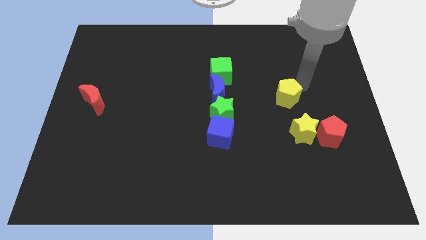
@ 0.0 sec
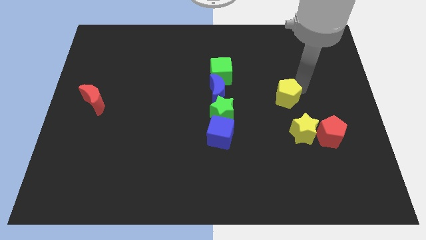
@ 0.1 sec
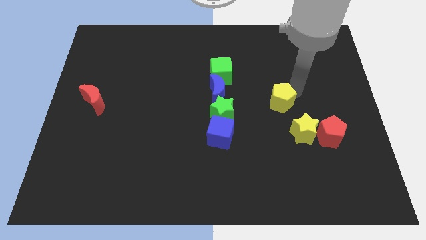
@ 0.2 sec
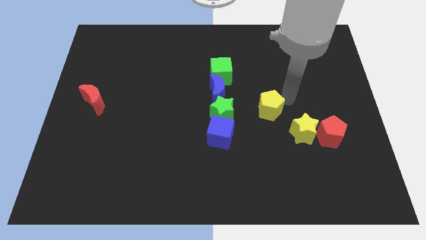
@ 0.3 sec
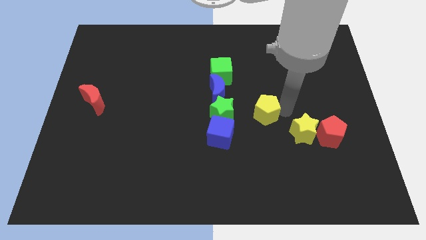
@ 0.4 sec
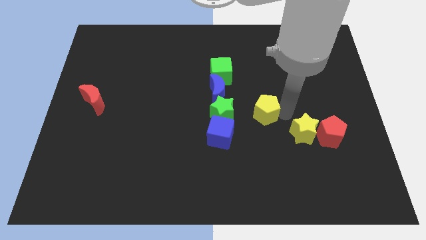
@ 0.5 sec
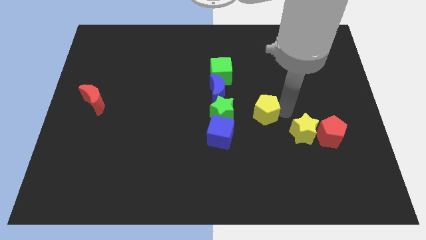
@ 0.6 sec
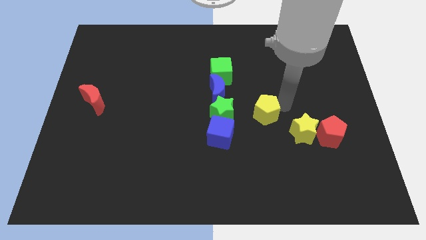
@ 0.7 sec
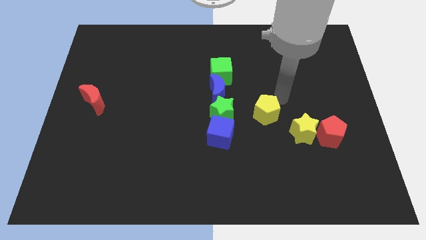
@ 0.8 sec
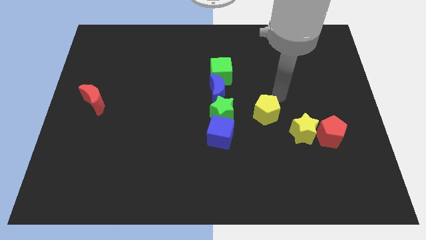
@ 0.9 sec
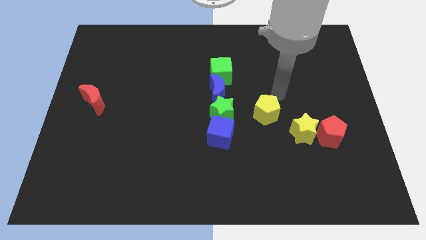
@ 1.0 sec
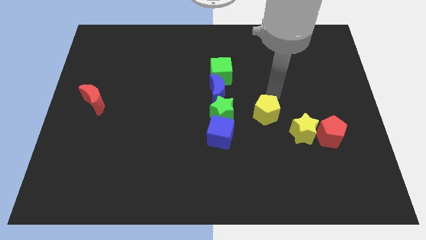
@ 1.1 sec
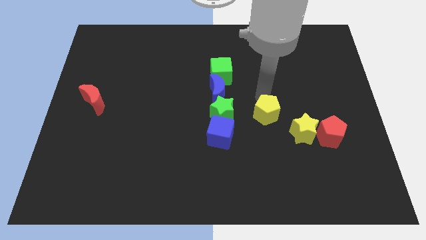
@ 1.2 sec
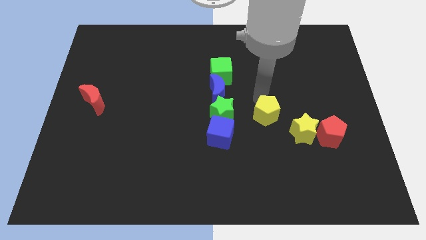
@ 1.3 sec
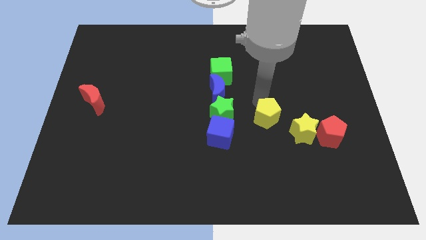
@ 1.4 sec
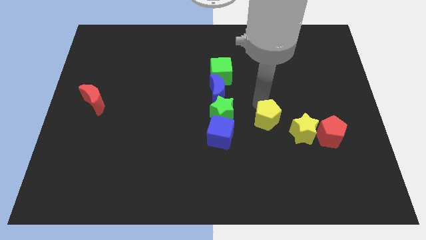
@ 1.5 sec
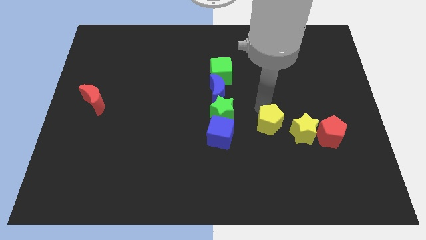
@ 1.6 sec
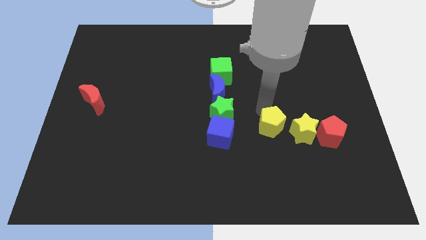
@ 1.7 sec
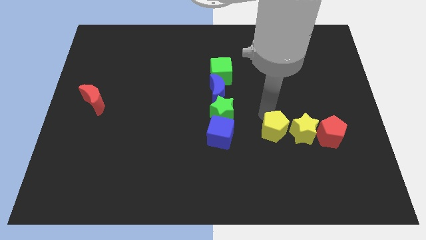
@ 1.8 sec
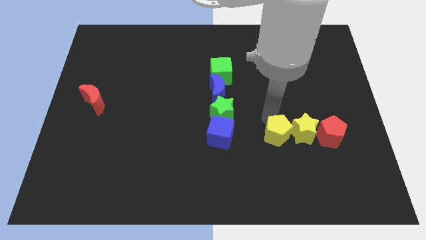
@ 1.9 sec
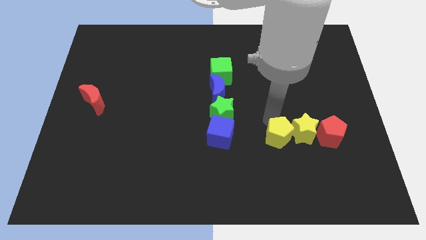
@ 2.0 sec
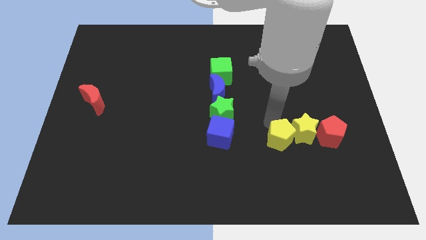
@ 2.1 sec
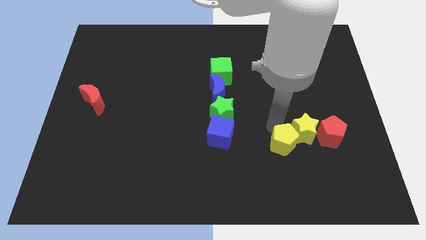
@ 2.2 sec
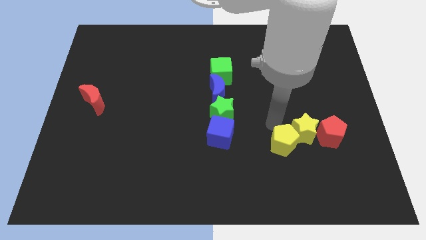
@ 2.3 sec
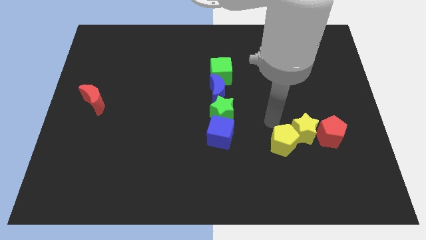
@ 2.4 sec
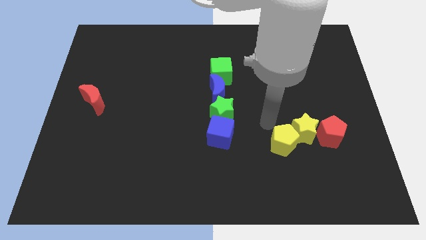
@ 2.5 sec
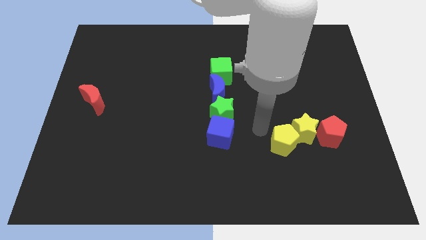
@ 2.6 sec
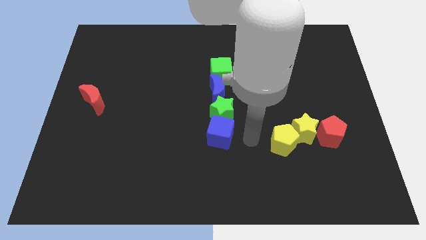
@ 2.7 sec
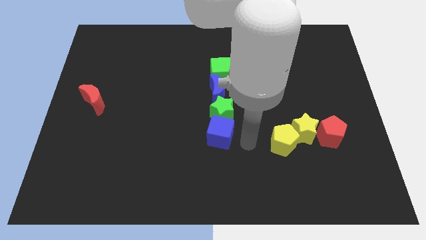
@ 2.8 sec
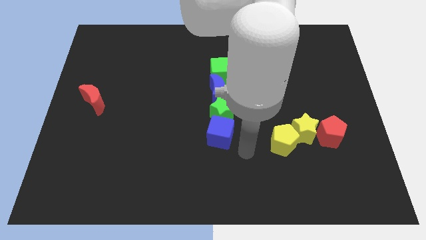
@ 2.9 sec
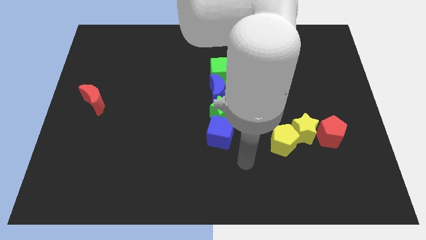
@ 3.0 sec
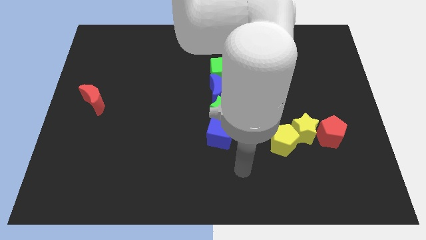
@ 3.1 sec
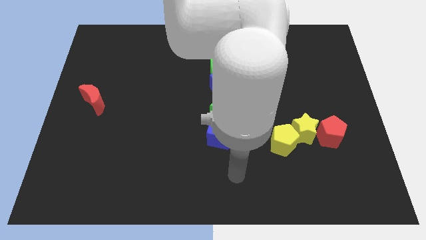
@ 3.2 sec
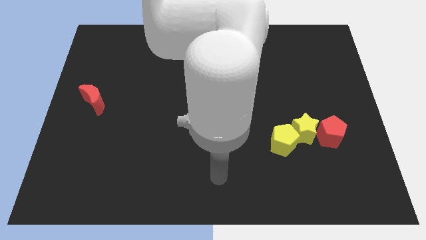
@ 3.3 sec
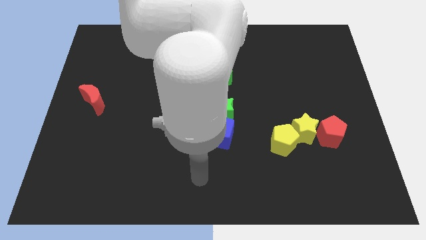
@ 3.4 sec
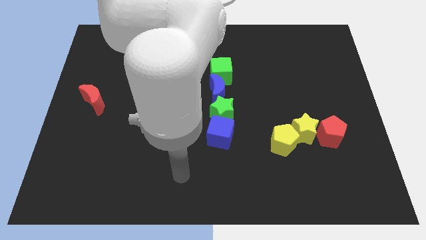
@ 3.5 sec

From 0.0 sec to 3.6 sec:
place yellow pentagon left of yellow star

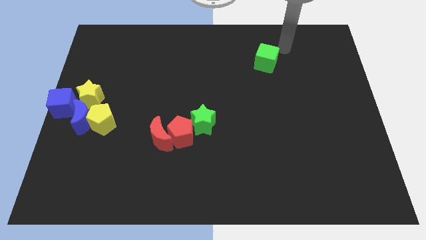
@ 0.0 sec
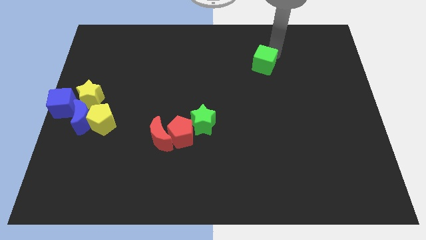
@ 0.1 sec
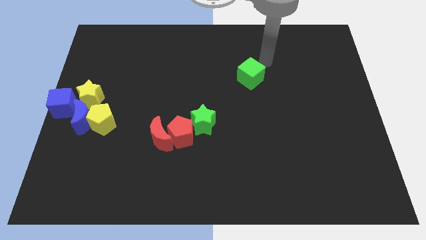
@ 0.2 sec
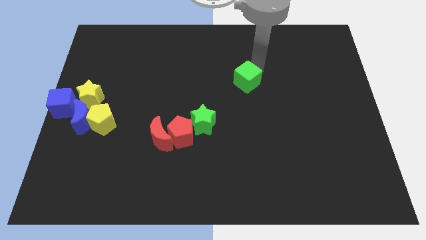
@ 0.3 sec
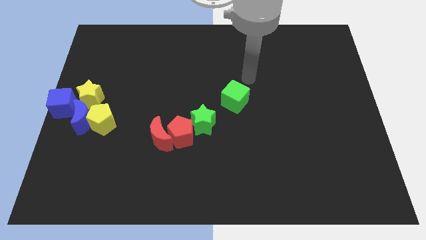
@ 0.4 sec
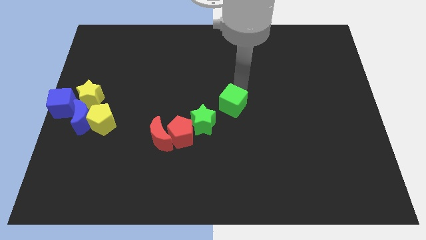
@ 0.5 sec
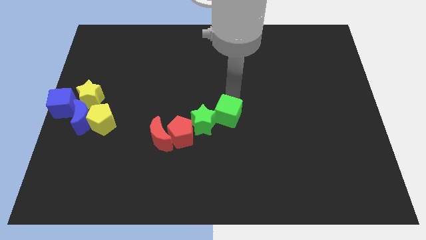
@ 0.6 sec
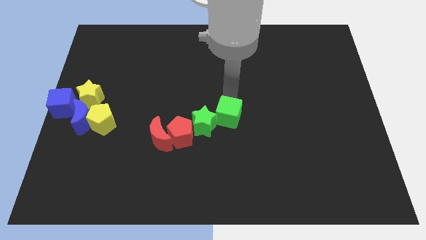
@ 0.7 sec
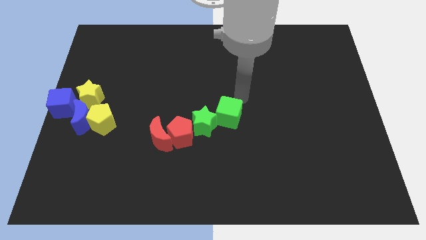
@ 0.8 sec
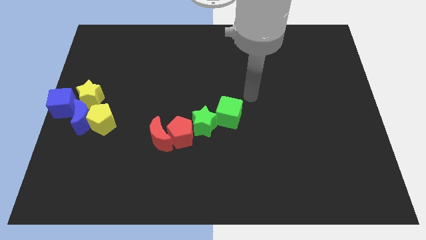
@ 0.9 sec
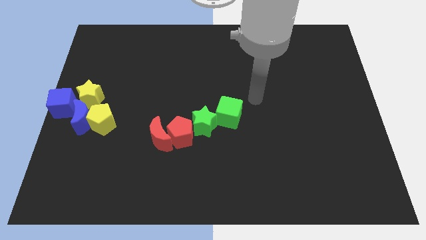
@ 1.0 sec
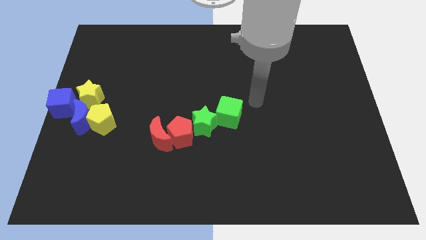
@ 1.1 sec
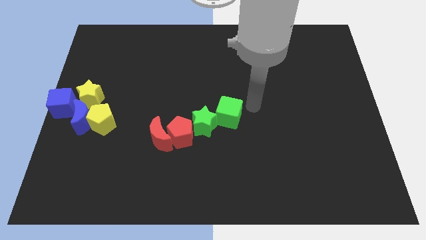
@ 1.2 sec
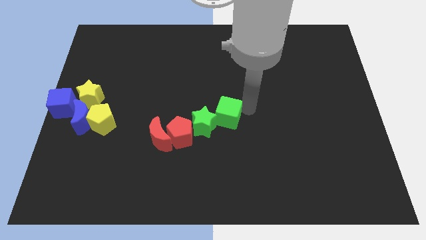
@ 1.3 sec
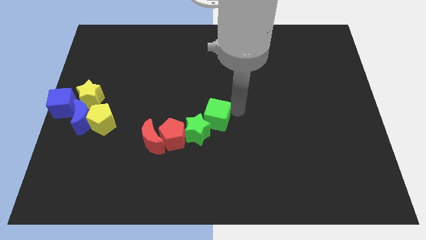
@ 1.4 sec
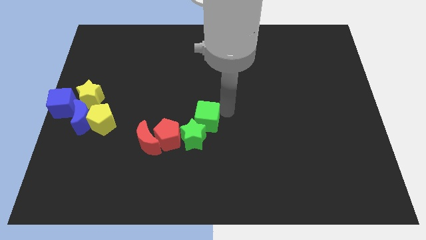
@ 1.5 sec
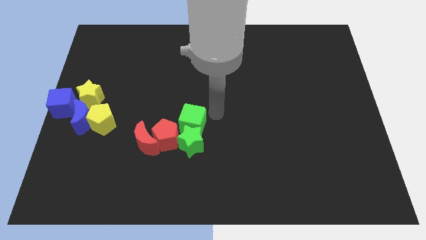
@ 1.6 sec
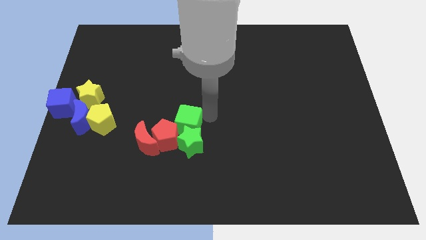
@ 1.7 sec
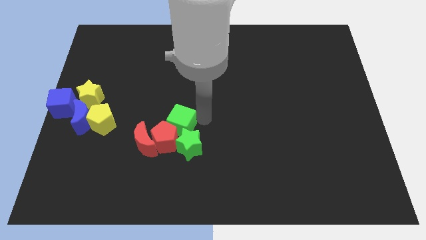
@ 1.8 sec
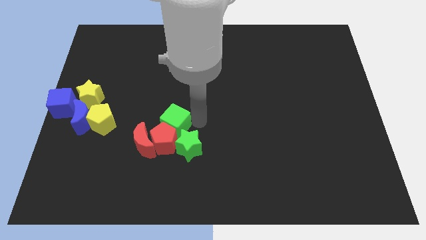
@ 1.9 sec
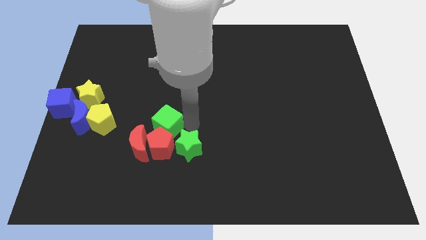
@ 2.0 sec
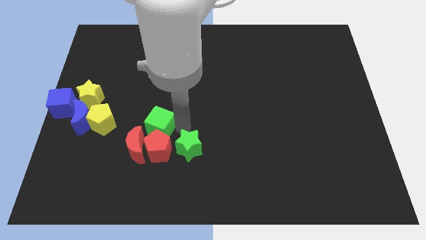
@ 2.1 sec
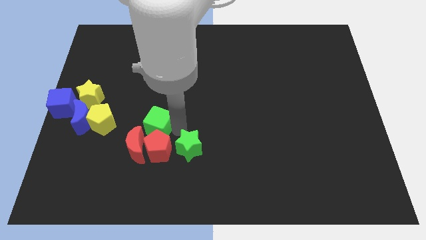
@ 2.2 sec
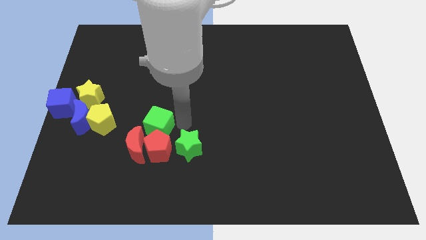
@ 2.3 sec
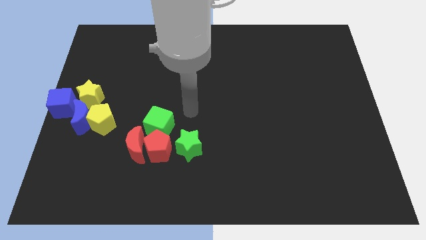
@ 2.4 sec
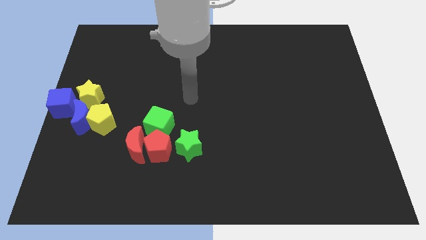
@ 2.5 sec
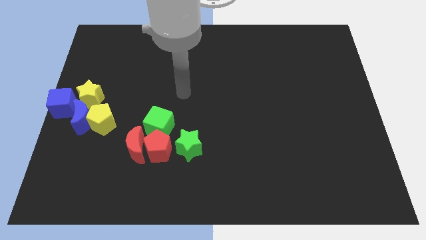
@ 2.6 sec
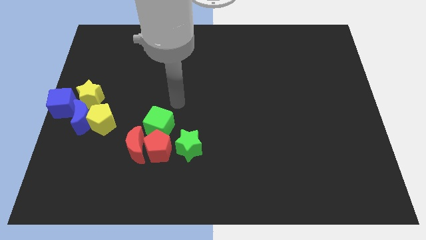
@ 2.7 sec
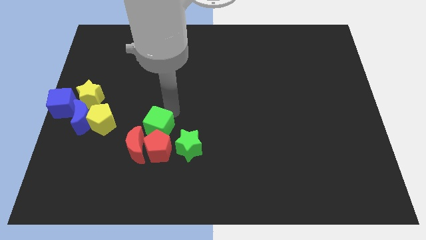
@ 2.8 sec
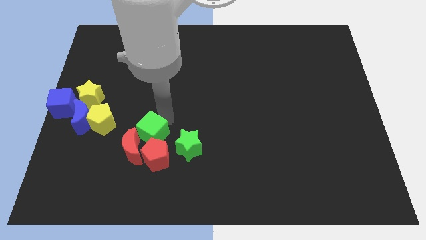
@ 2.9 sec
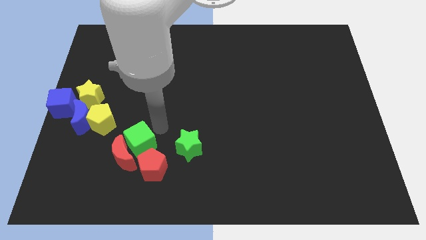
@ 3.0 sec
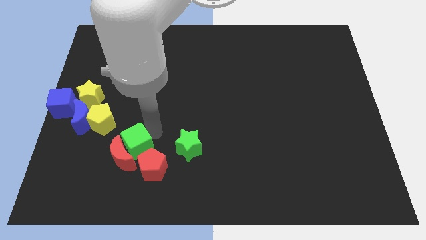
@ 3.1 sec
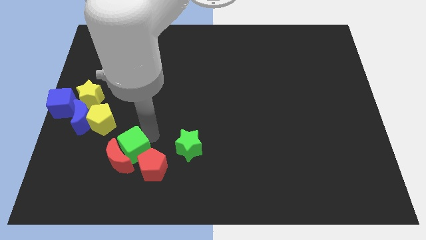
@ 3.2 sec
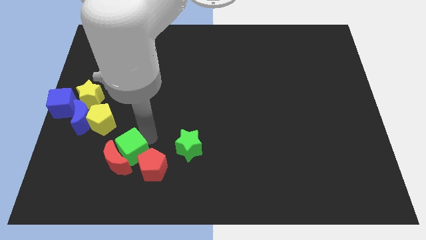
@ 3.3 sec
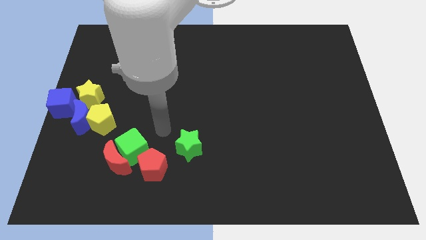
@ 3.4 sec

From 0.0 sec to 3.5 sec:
move the green cube into the red moon

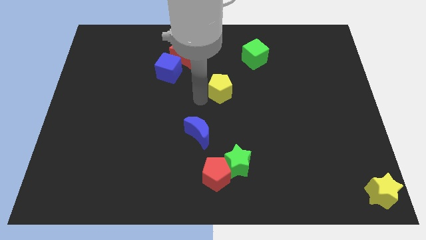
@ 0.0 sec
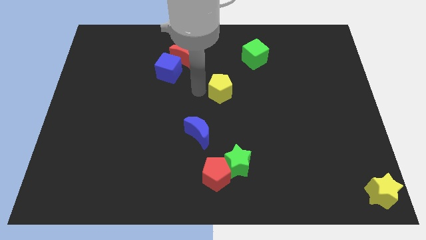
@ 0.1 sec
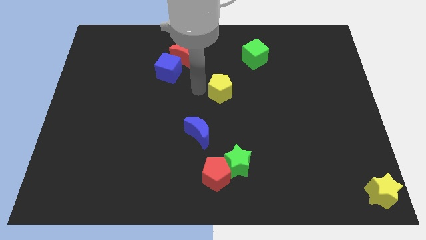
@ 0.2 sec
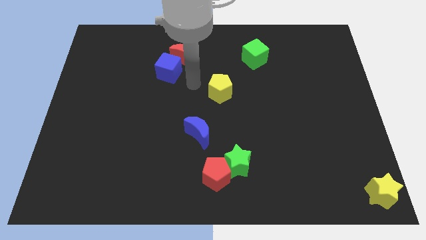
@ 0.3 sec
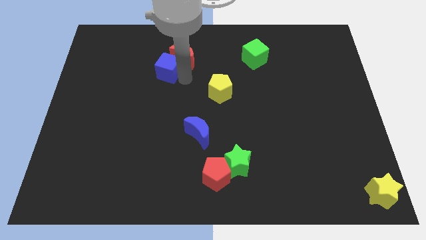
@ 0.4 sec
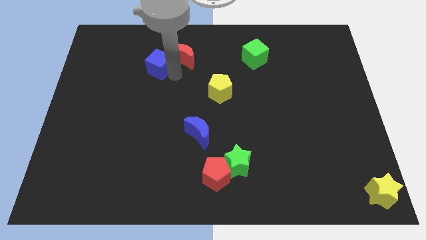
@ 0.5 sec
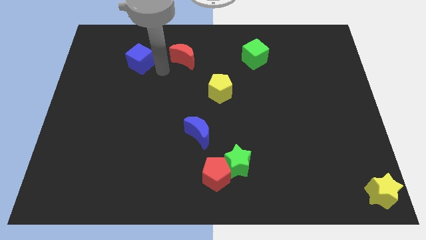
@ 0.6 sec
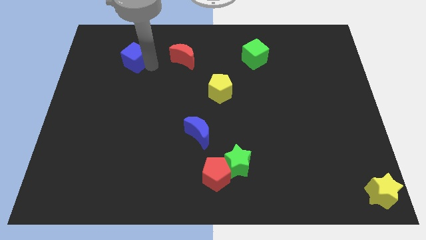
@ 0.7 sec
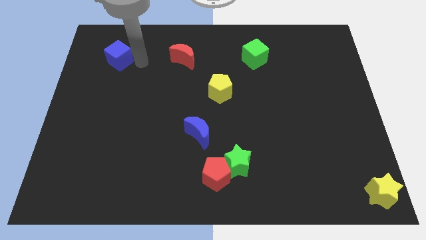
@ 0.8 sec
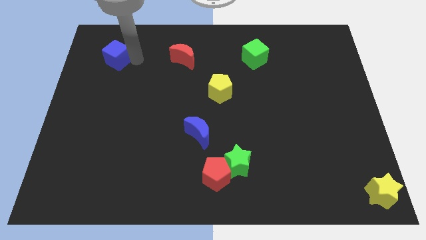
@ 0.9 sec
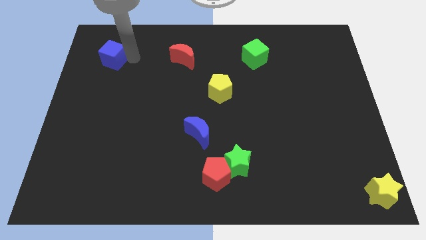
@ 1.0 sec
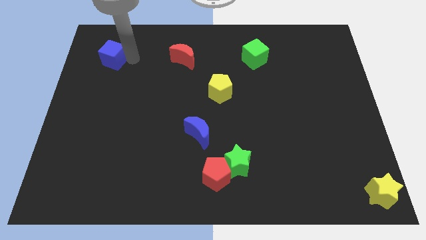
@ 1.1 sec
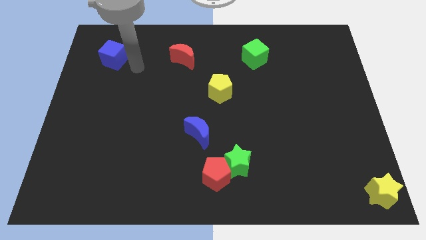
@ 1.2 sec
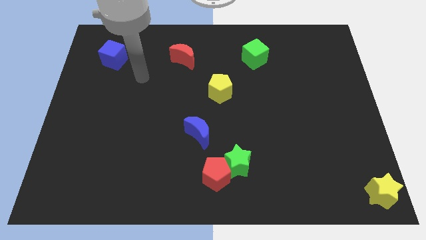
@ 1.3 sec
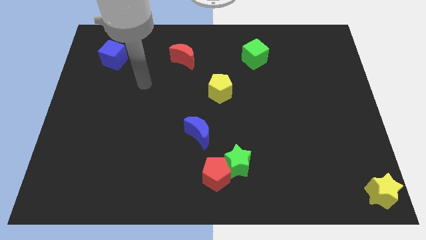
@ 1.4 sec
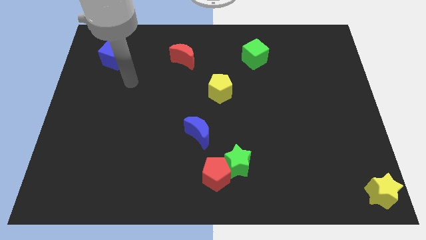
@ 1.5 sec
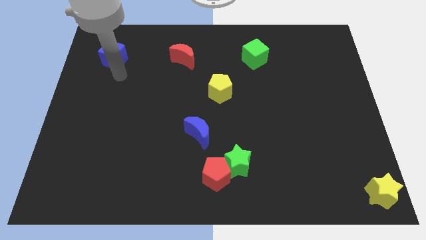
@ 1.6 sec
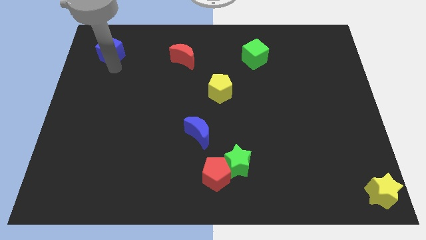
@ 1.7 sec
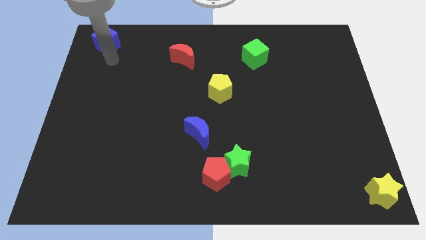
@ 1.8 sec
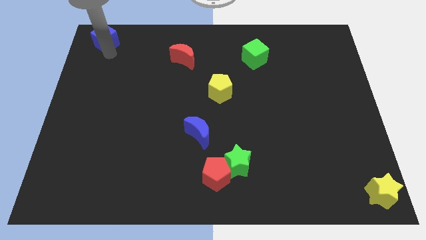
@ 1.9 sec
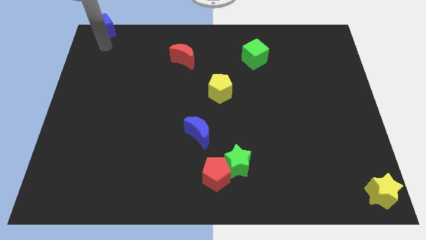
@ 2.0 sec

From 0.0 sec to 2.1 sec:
move the blue cube to the top left side

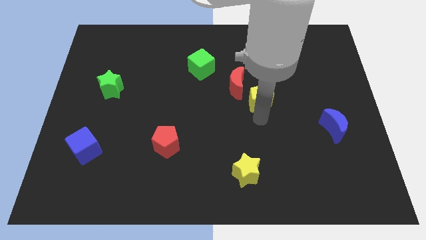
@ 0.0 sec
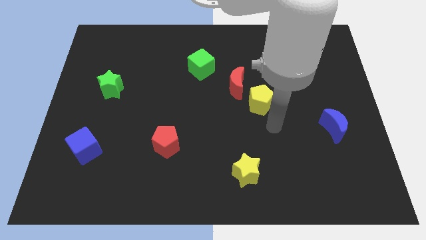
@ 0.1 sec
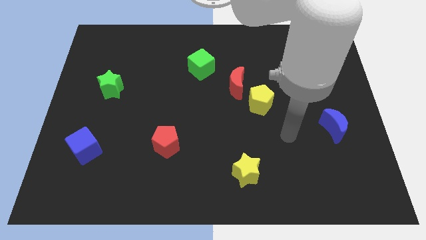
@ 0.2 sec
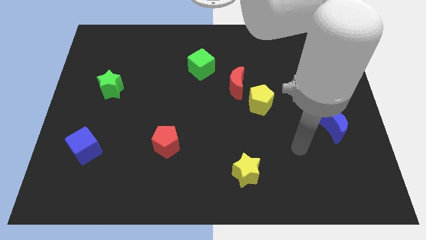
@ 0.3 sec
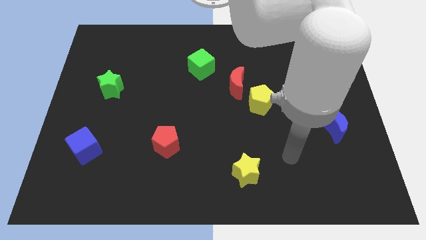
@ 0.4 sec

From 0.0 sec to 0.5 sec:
move the arm away from the yellow pentagon
